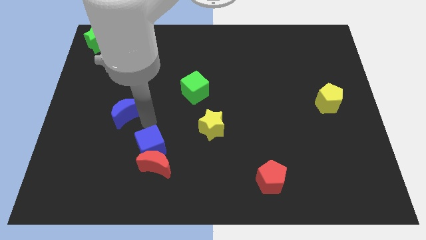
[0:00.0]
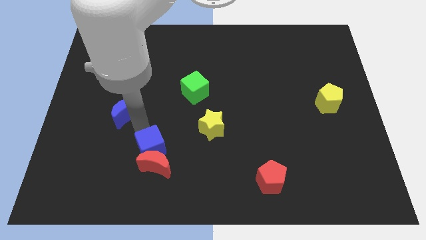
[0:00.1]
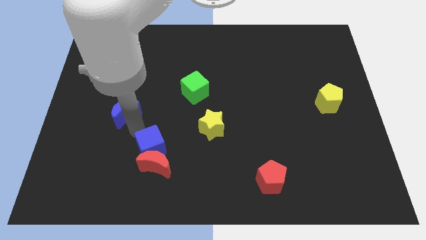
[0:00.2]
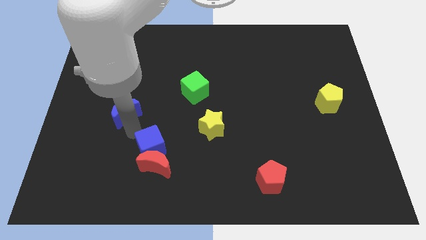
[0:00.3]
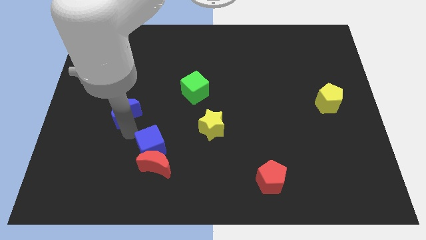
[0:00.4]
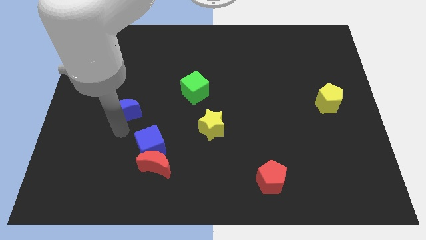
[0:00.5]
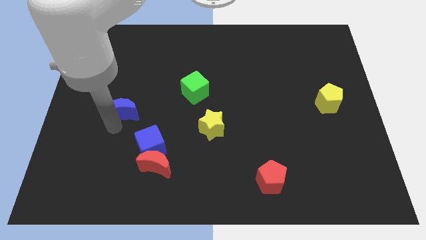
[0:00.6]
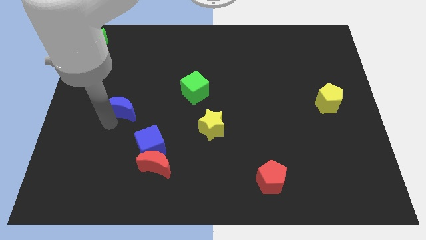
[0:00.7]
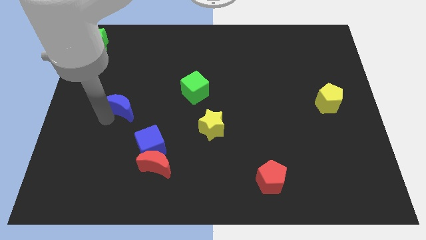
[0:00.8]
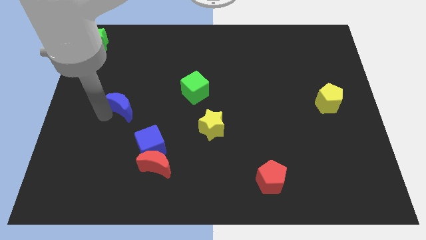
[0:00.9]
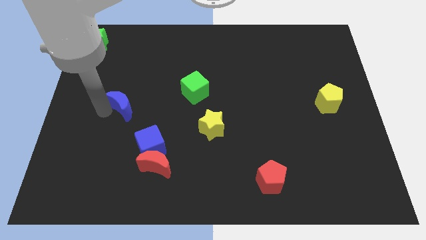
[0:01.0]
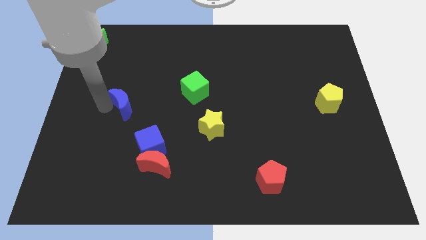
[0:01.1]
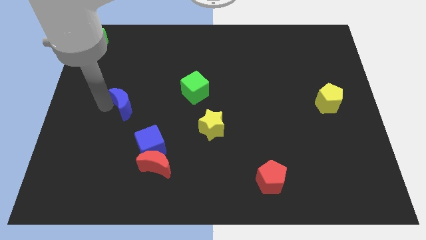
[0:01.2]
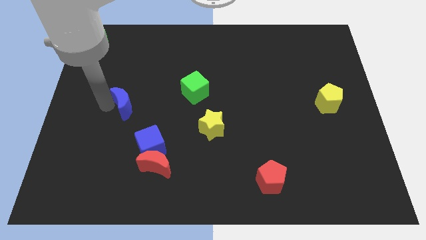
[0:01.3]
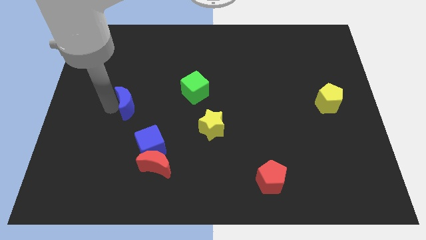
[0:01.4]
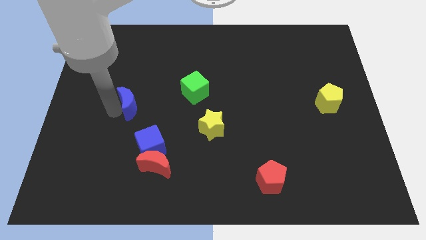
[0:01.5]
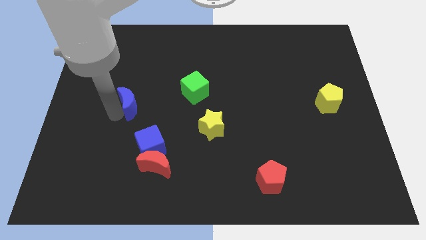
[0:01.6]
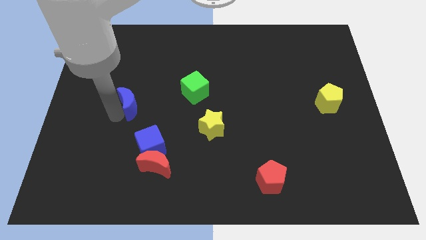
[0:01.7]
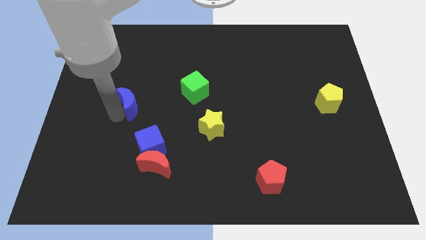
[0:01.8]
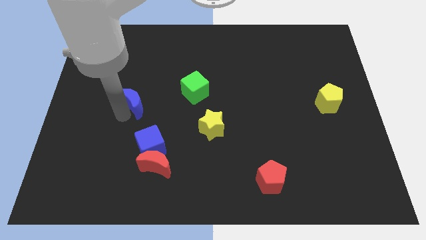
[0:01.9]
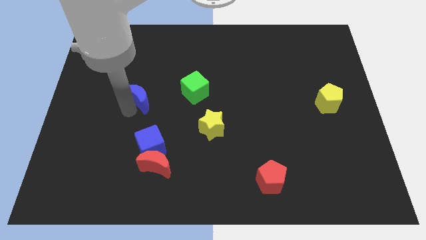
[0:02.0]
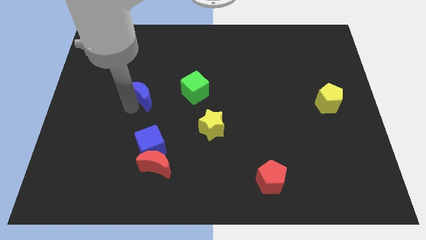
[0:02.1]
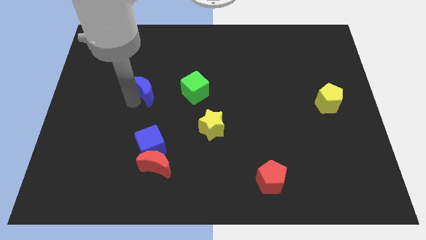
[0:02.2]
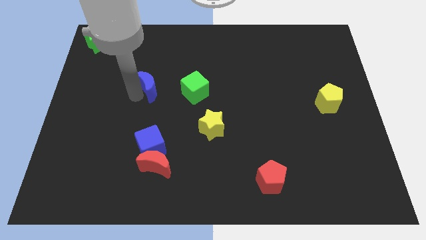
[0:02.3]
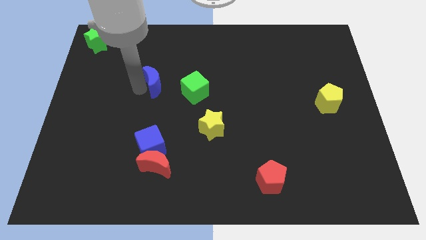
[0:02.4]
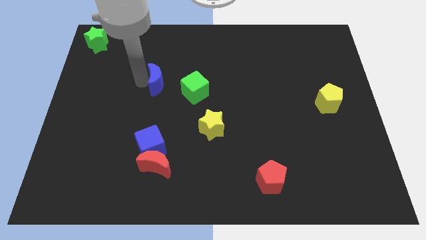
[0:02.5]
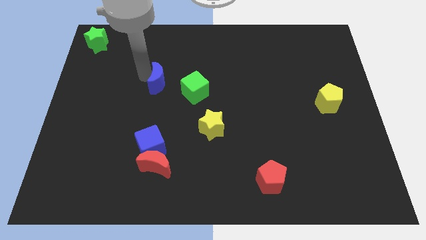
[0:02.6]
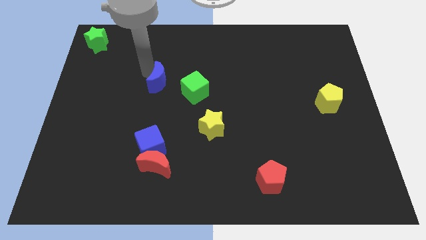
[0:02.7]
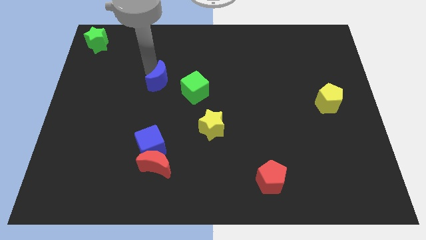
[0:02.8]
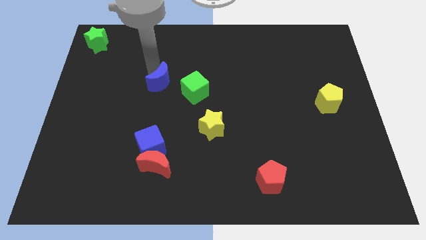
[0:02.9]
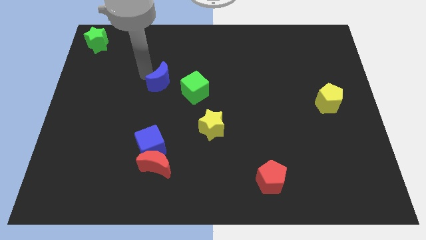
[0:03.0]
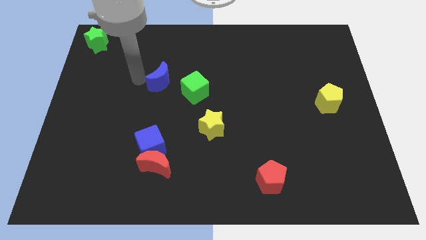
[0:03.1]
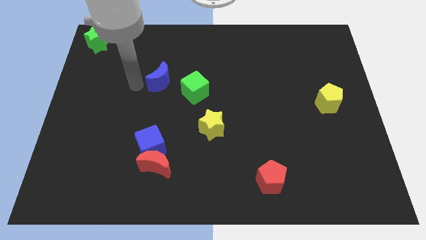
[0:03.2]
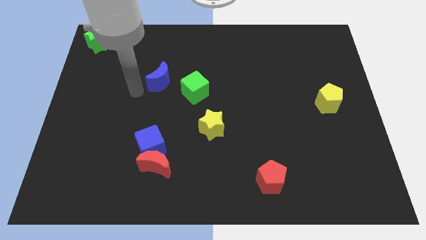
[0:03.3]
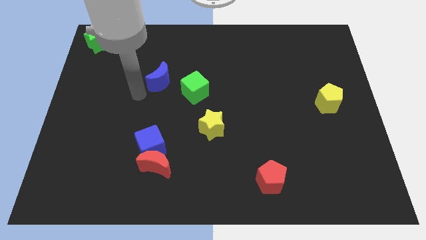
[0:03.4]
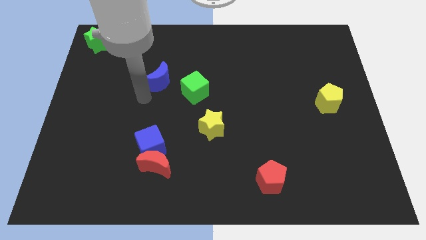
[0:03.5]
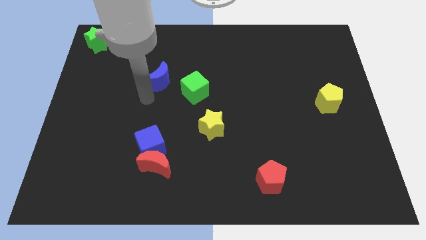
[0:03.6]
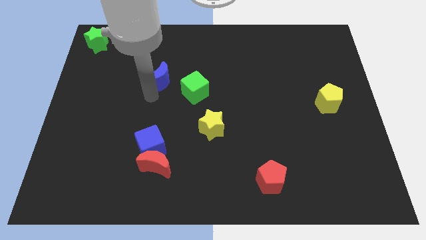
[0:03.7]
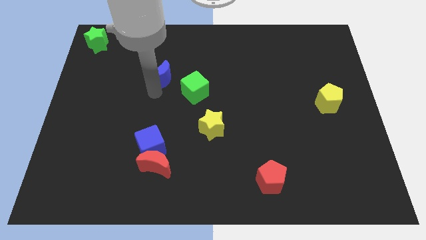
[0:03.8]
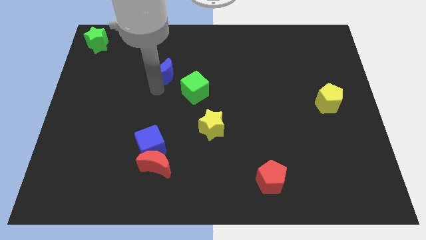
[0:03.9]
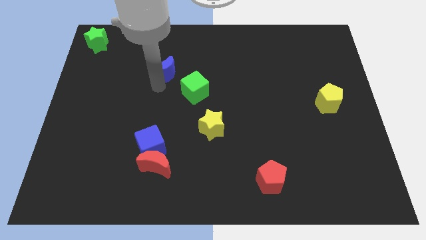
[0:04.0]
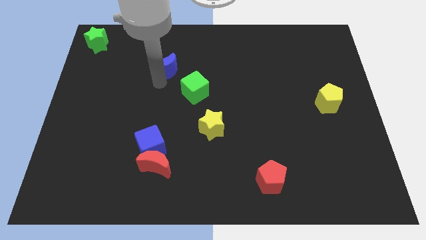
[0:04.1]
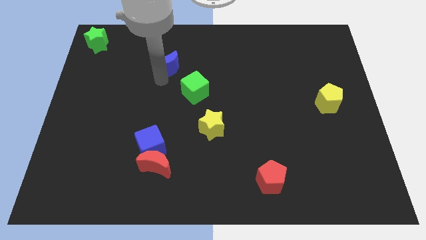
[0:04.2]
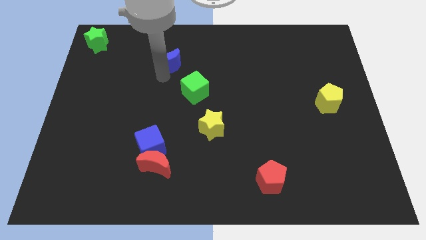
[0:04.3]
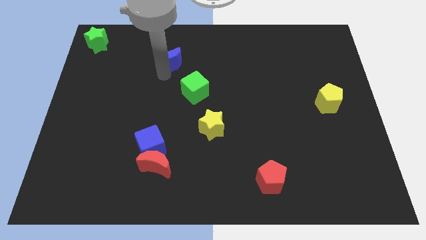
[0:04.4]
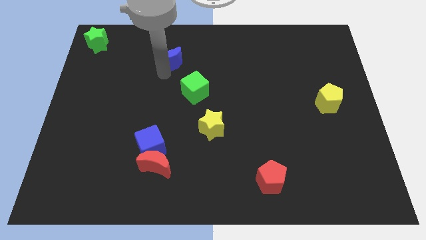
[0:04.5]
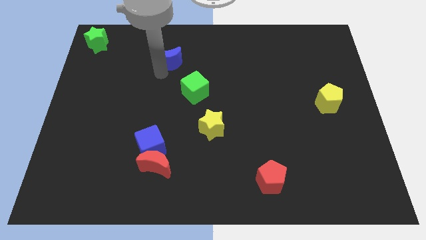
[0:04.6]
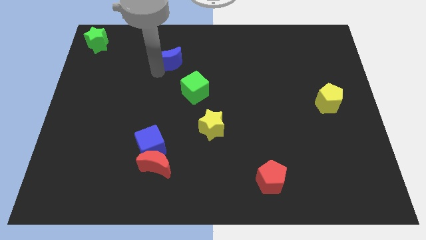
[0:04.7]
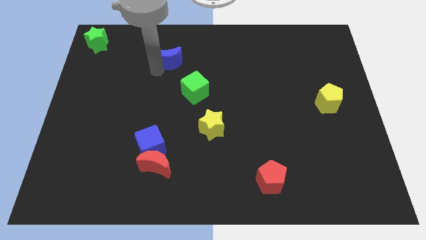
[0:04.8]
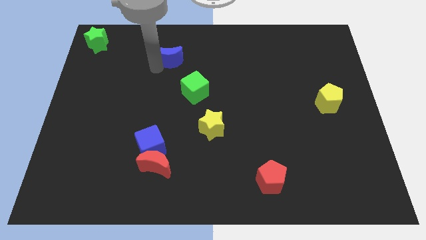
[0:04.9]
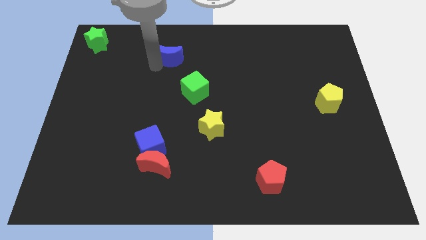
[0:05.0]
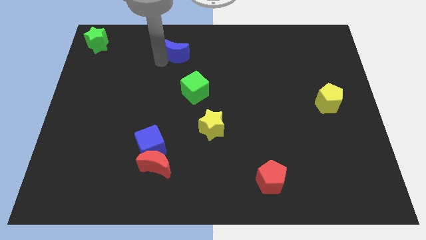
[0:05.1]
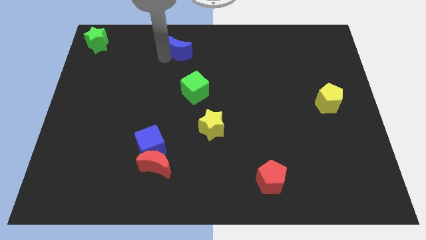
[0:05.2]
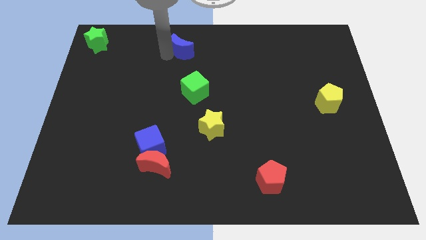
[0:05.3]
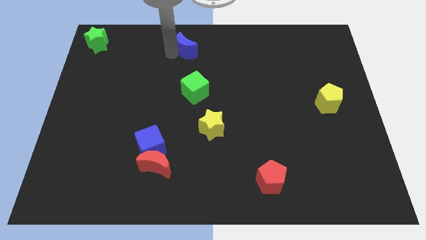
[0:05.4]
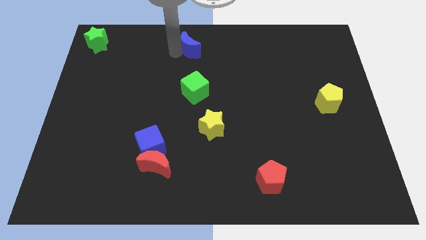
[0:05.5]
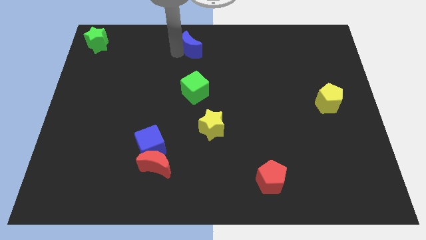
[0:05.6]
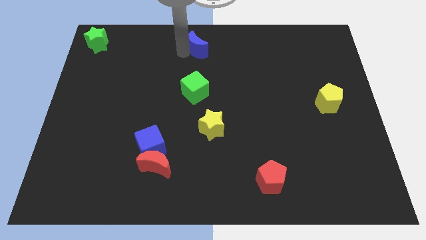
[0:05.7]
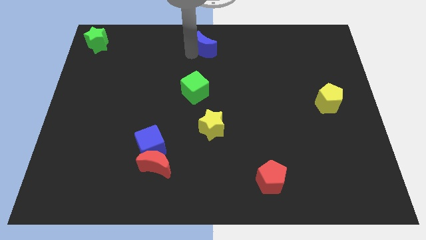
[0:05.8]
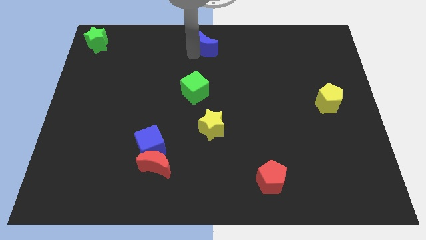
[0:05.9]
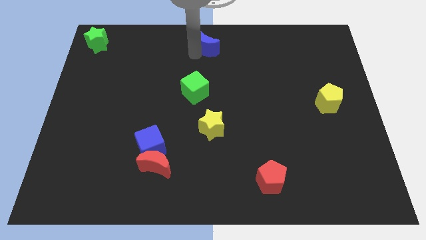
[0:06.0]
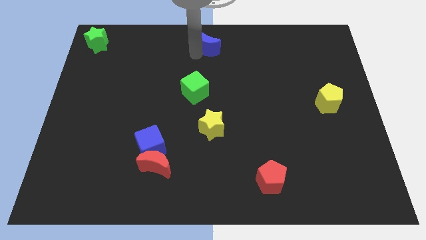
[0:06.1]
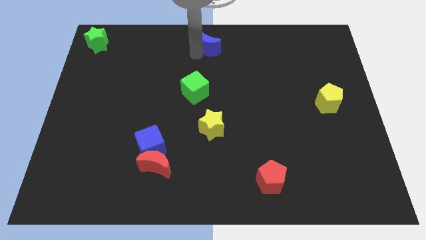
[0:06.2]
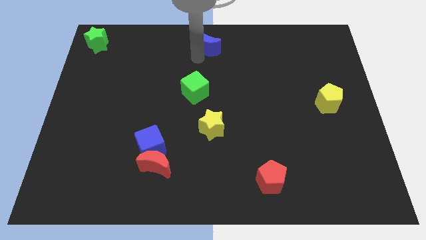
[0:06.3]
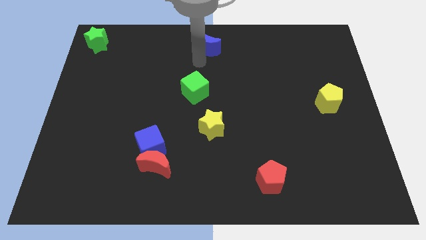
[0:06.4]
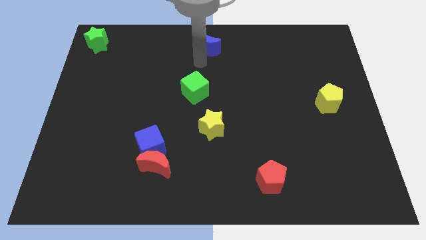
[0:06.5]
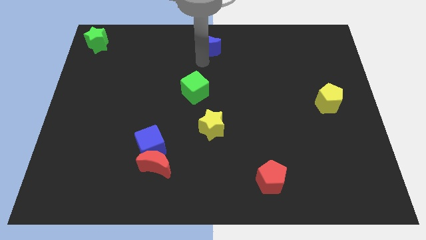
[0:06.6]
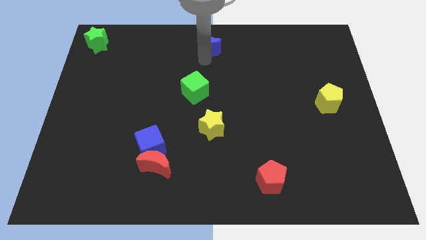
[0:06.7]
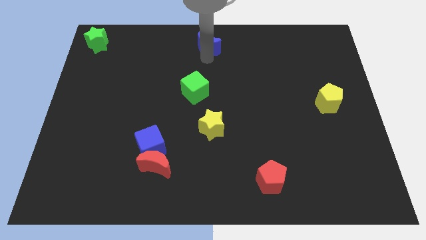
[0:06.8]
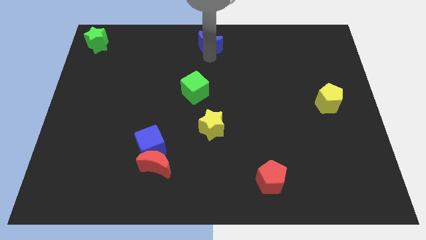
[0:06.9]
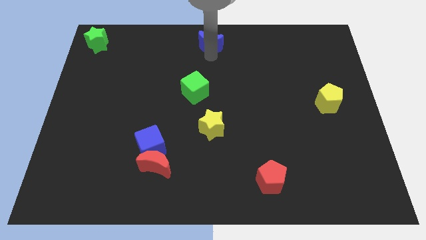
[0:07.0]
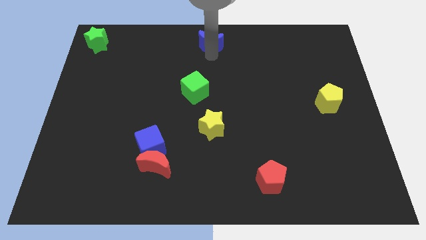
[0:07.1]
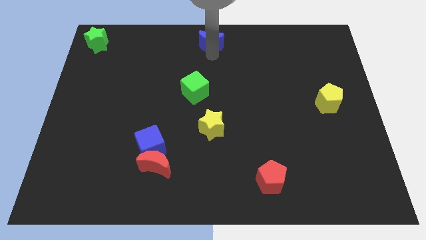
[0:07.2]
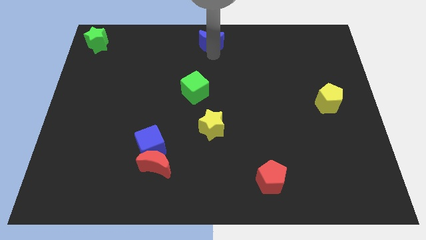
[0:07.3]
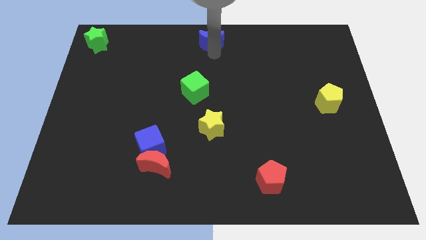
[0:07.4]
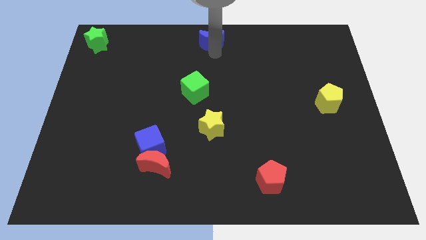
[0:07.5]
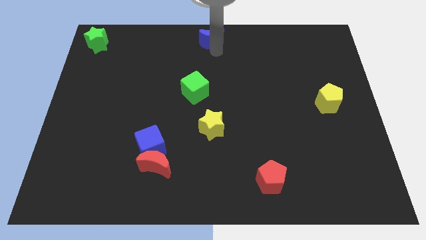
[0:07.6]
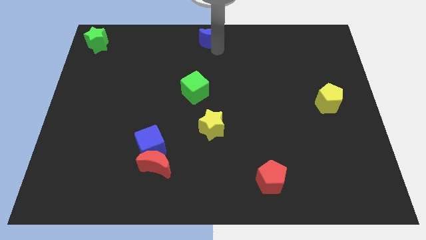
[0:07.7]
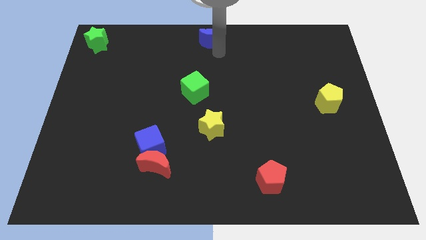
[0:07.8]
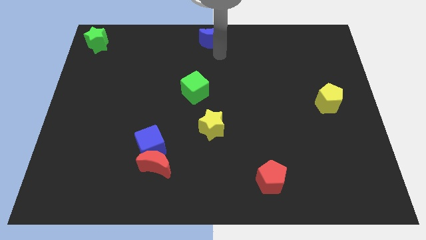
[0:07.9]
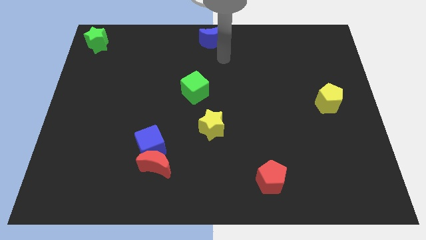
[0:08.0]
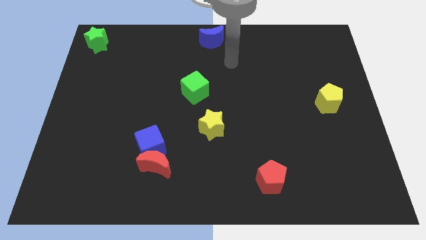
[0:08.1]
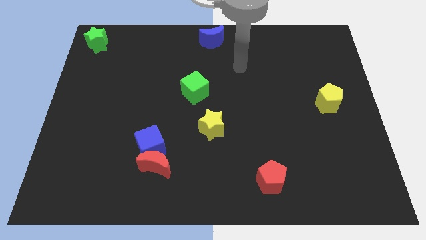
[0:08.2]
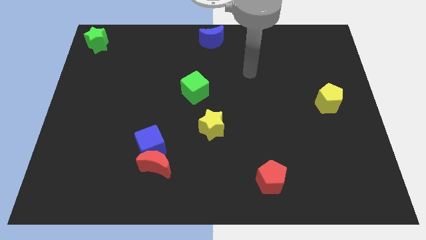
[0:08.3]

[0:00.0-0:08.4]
place the blue moon at the top center of the board

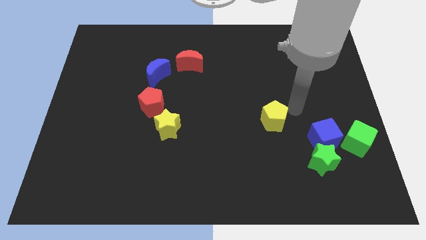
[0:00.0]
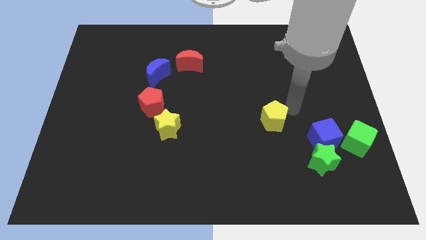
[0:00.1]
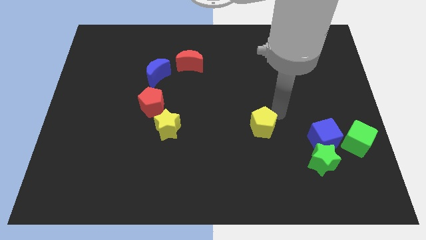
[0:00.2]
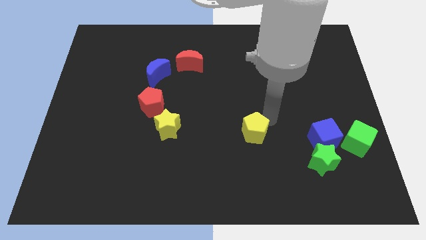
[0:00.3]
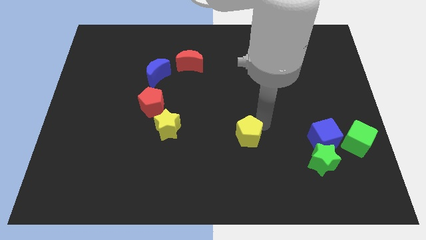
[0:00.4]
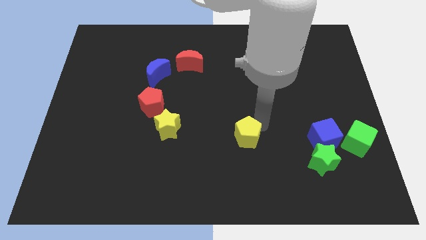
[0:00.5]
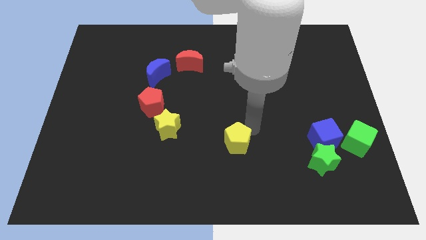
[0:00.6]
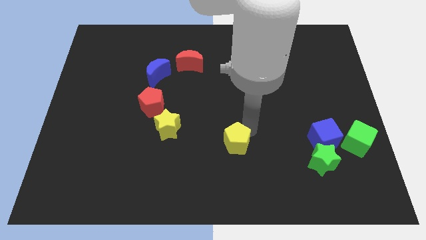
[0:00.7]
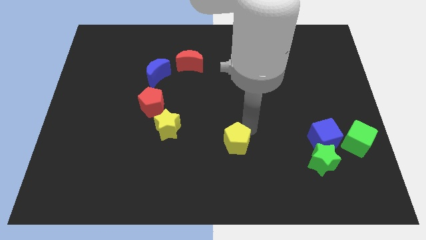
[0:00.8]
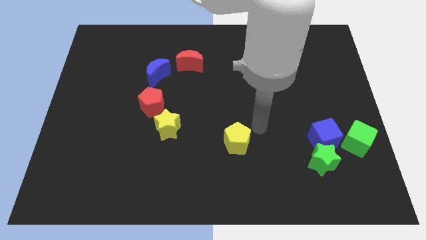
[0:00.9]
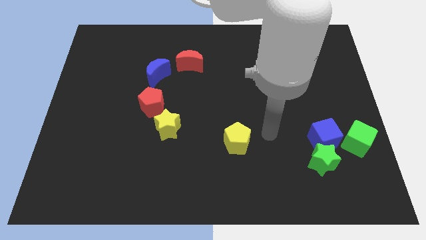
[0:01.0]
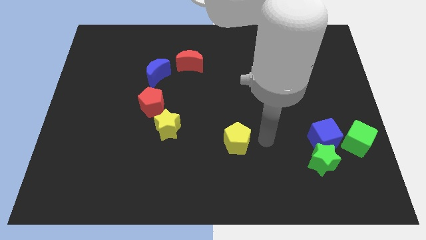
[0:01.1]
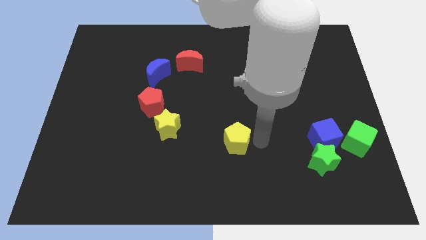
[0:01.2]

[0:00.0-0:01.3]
move the yellow pentagon parallel to the right of the yellow star
